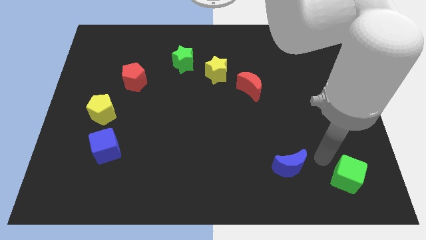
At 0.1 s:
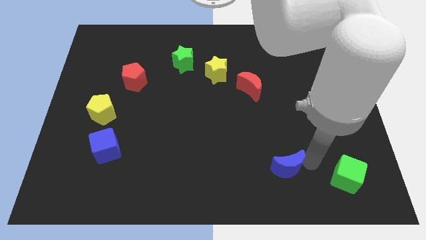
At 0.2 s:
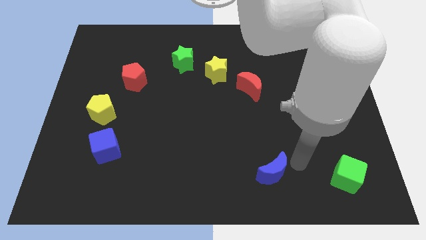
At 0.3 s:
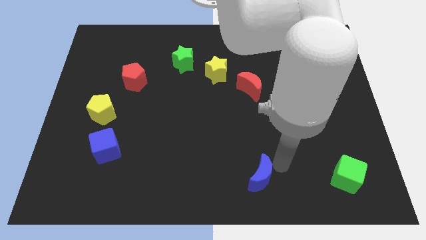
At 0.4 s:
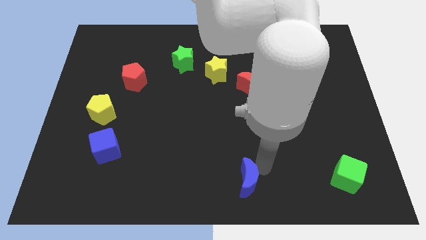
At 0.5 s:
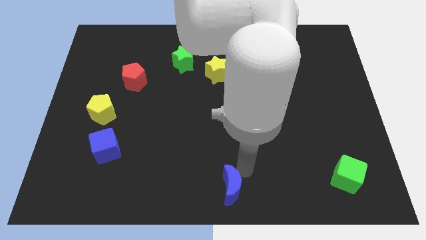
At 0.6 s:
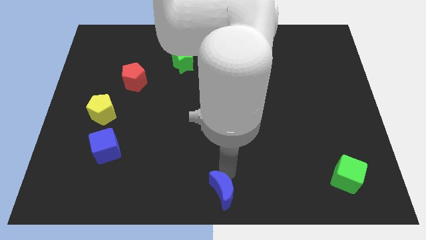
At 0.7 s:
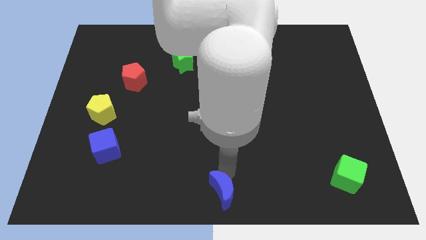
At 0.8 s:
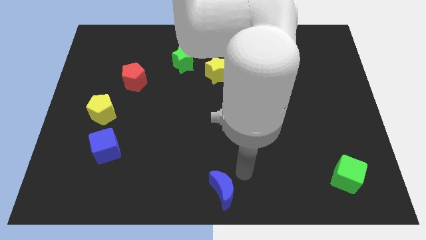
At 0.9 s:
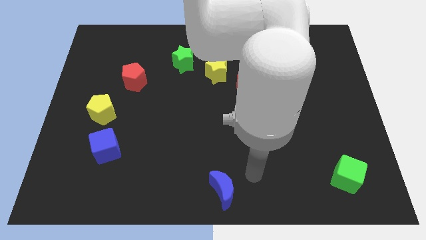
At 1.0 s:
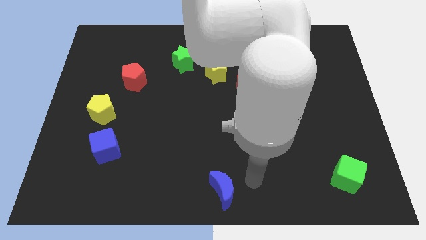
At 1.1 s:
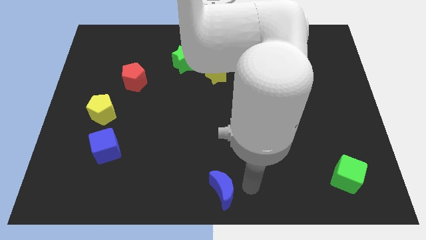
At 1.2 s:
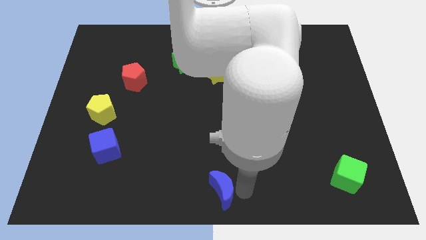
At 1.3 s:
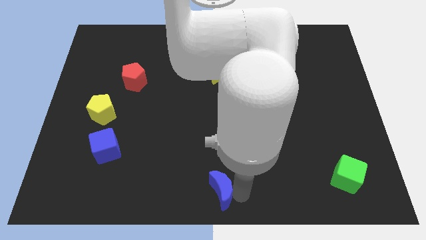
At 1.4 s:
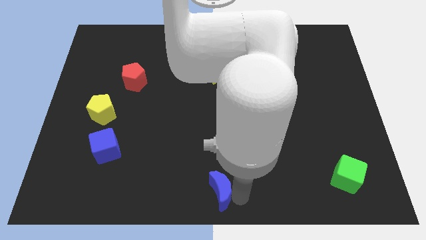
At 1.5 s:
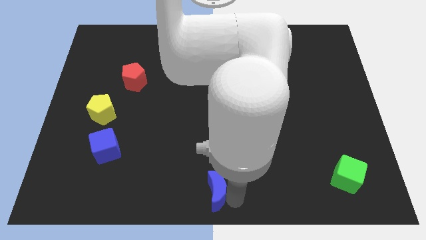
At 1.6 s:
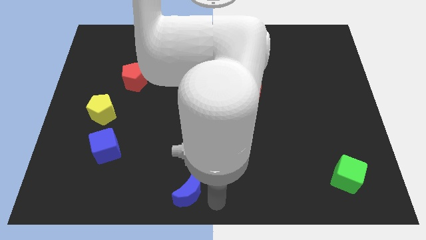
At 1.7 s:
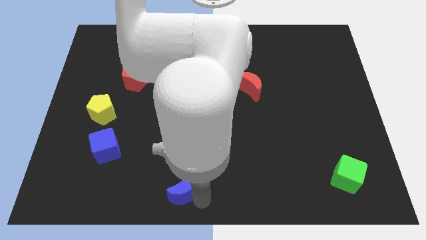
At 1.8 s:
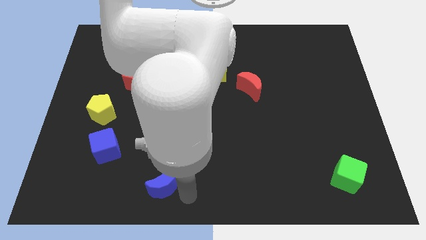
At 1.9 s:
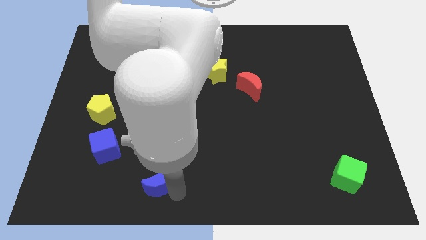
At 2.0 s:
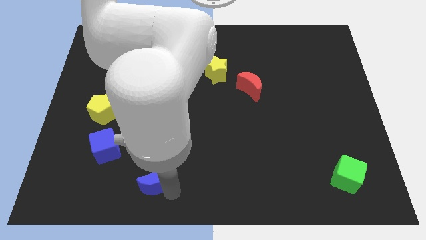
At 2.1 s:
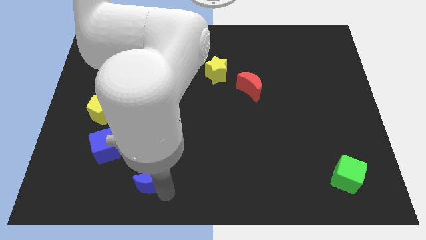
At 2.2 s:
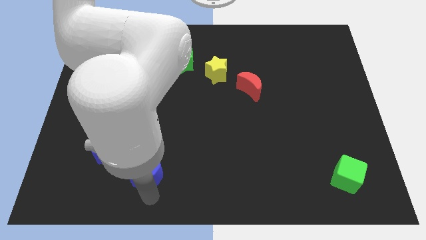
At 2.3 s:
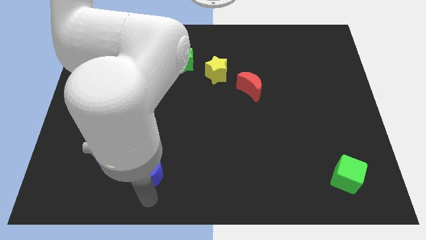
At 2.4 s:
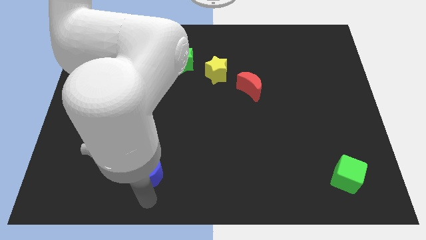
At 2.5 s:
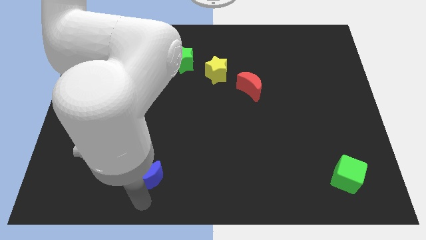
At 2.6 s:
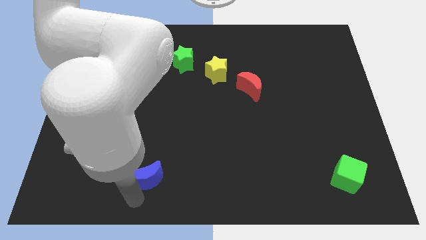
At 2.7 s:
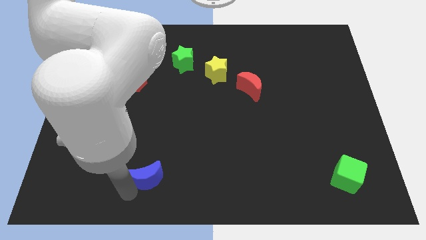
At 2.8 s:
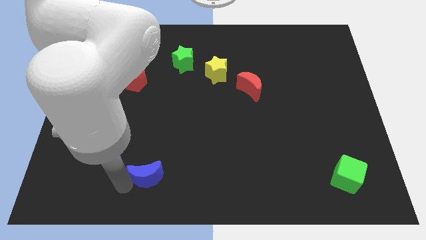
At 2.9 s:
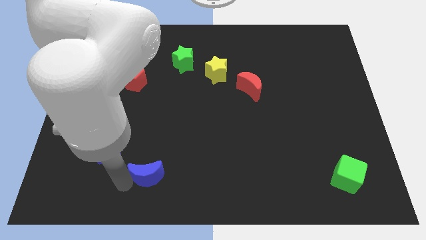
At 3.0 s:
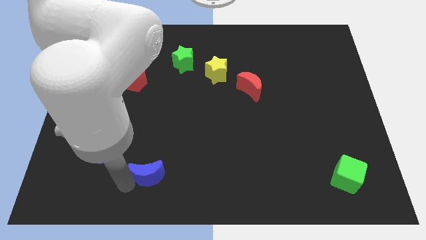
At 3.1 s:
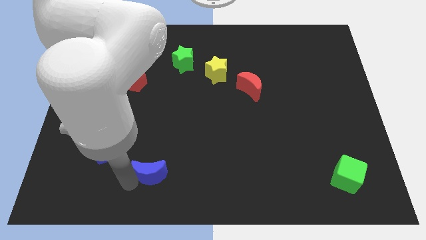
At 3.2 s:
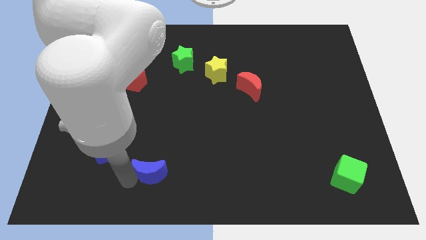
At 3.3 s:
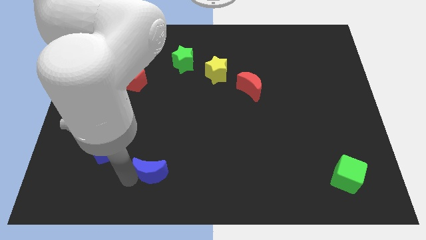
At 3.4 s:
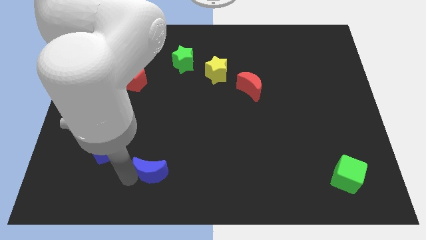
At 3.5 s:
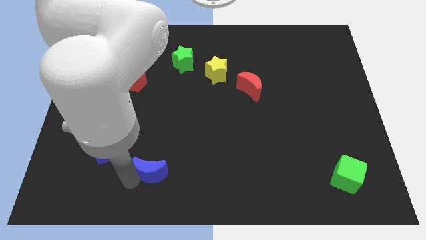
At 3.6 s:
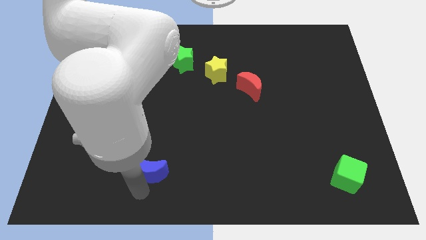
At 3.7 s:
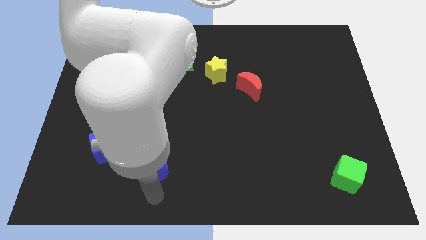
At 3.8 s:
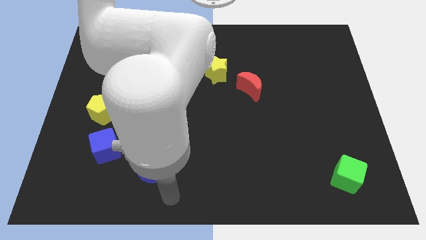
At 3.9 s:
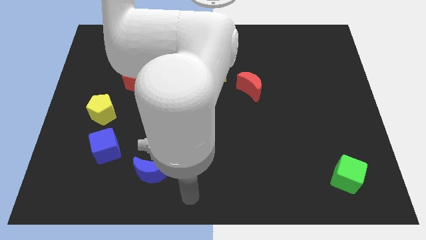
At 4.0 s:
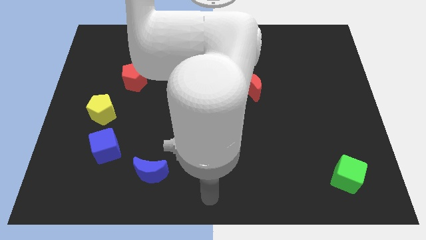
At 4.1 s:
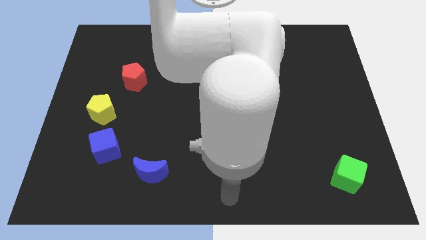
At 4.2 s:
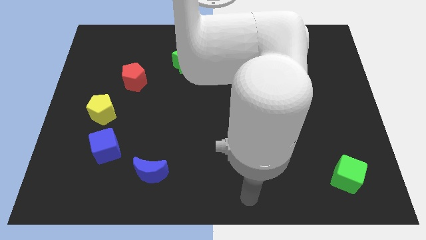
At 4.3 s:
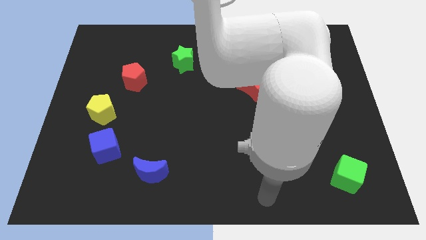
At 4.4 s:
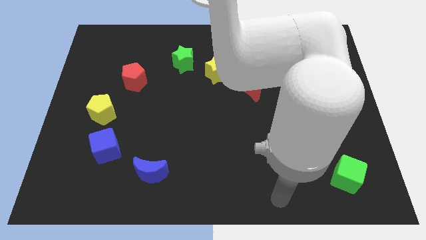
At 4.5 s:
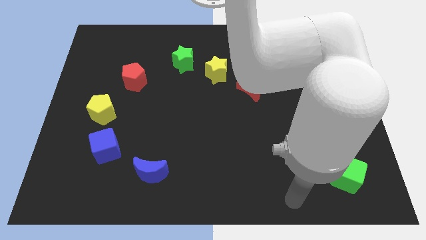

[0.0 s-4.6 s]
place blue moon right to blue cube

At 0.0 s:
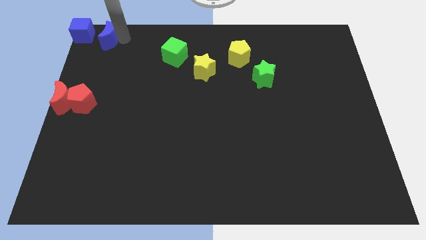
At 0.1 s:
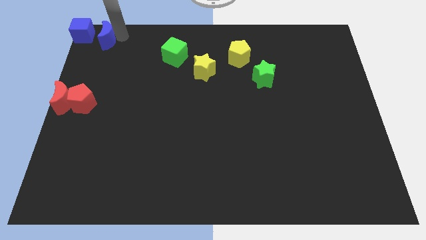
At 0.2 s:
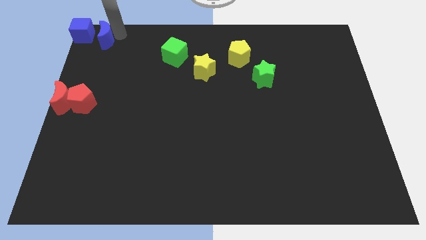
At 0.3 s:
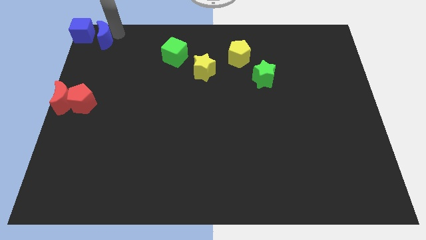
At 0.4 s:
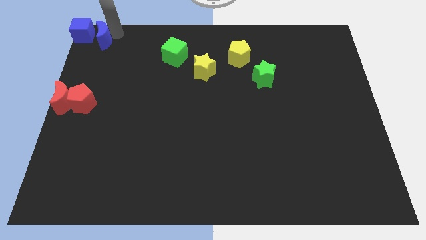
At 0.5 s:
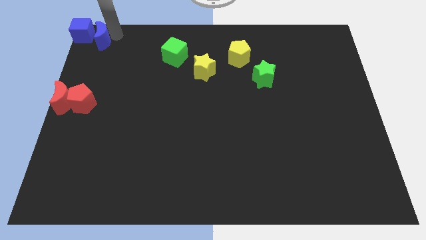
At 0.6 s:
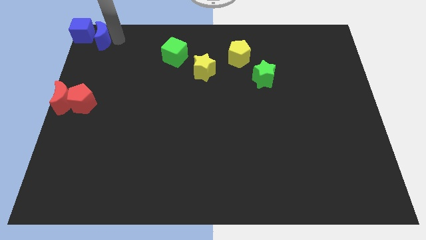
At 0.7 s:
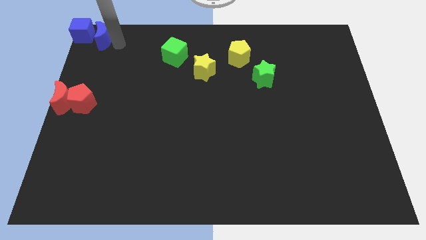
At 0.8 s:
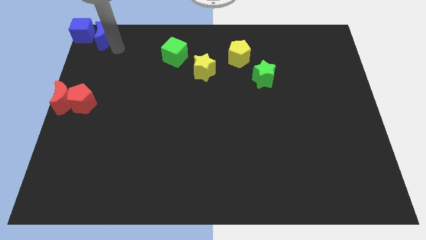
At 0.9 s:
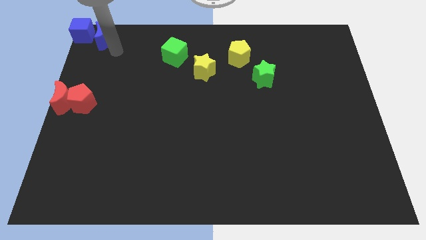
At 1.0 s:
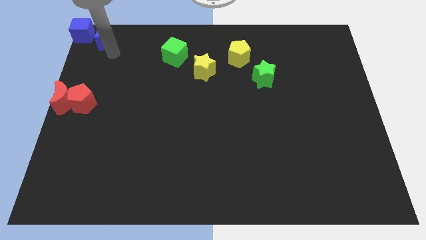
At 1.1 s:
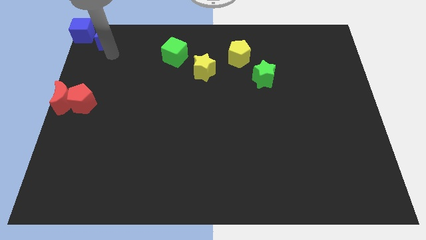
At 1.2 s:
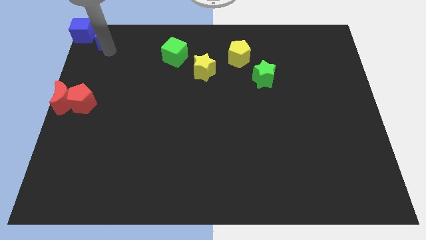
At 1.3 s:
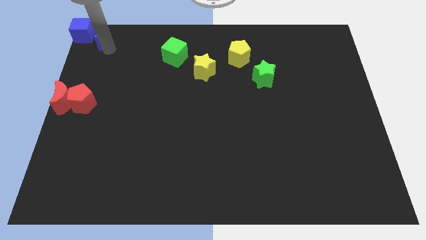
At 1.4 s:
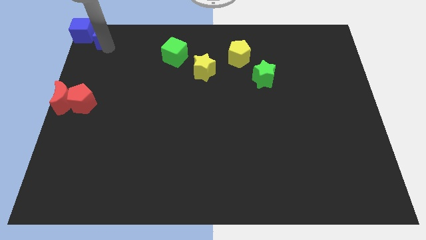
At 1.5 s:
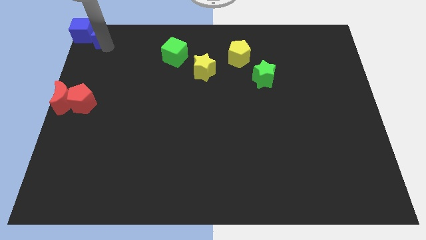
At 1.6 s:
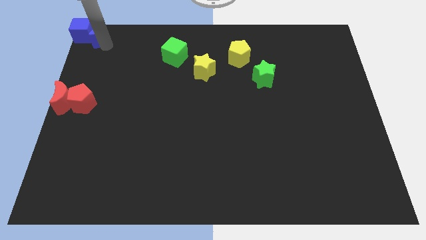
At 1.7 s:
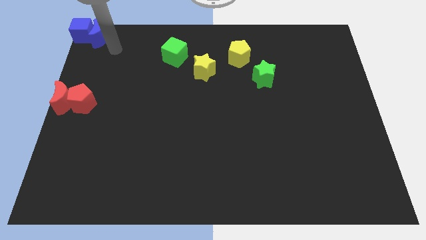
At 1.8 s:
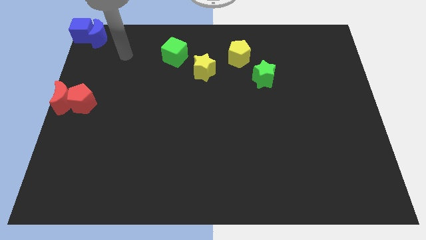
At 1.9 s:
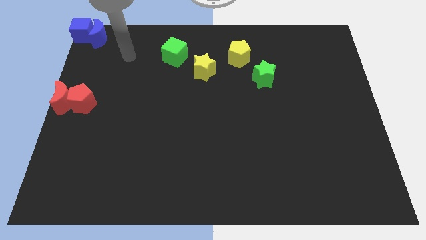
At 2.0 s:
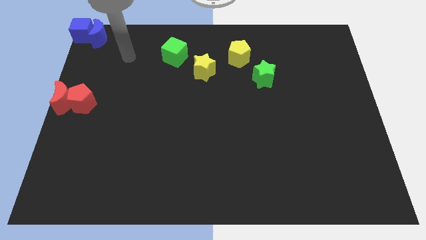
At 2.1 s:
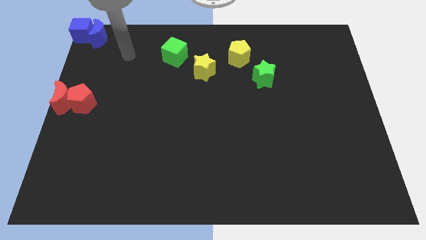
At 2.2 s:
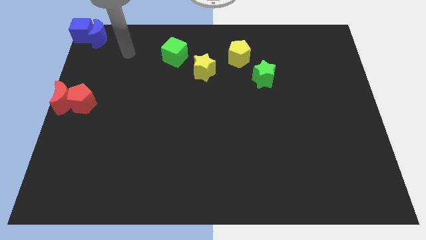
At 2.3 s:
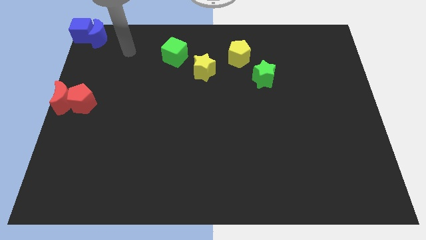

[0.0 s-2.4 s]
place blue moon to the right side of the blue cube

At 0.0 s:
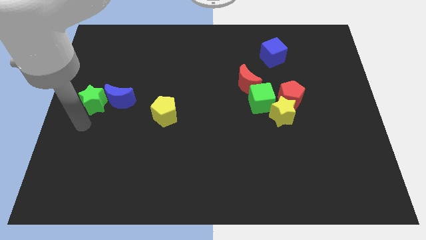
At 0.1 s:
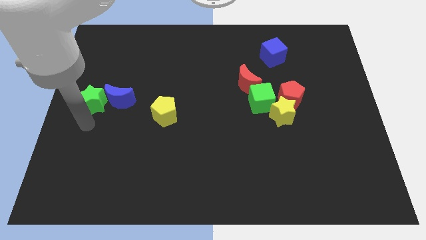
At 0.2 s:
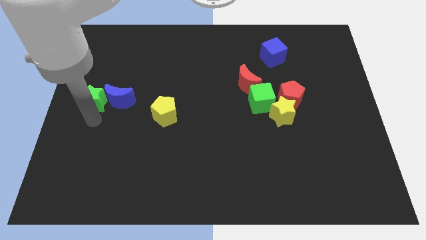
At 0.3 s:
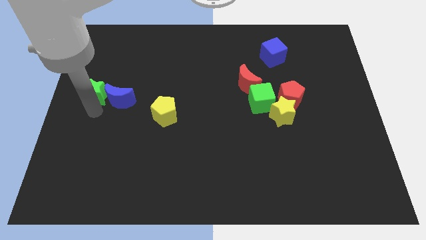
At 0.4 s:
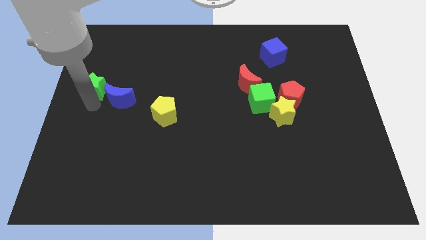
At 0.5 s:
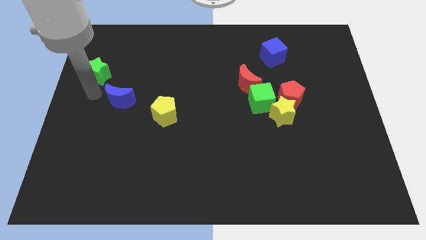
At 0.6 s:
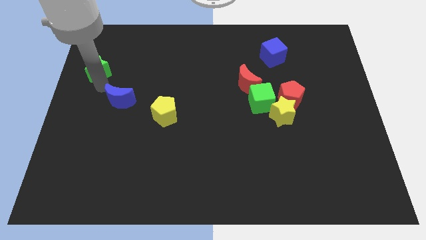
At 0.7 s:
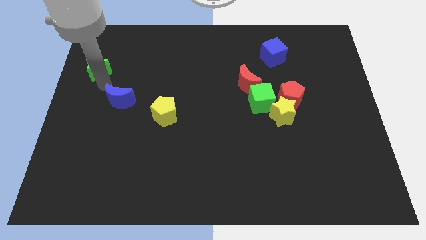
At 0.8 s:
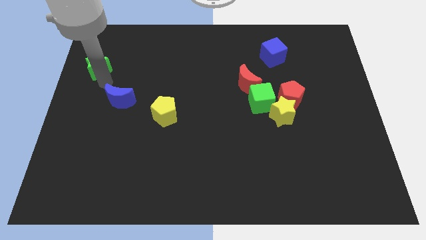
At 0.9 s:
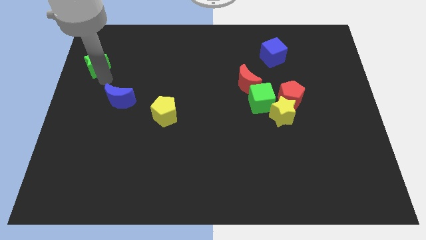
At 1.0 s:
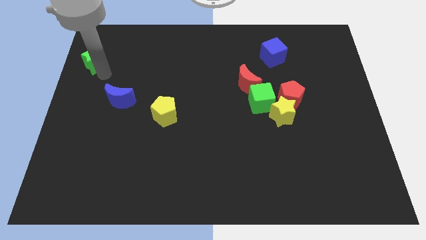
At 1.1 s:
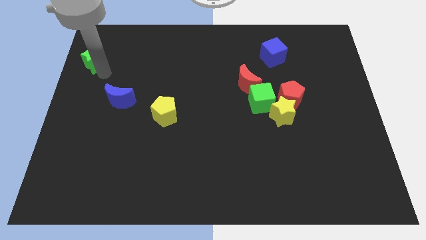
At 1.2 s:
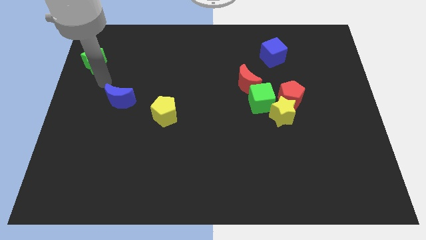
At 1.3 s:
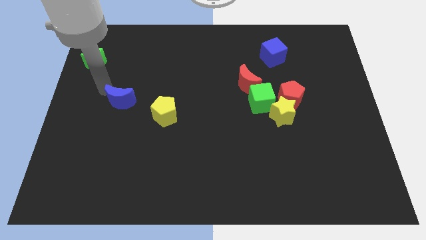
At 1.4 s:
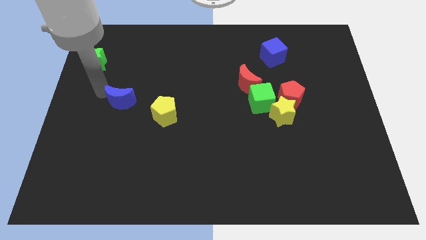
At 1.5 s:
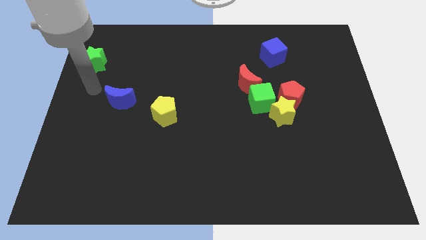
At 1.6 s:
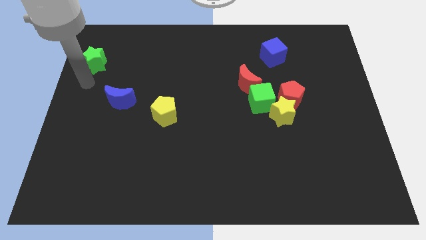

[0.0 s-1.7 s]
move green star towards top left corner of the board
